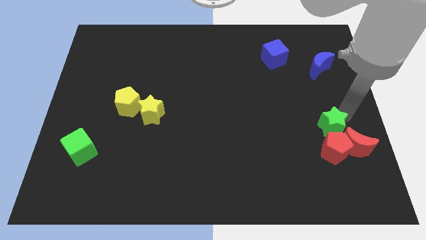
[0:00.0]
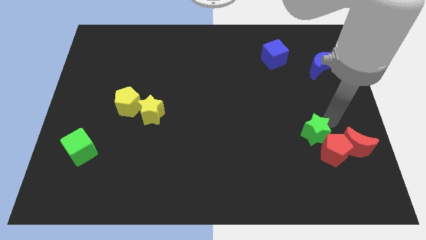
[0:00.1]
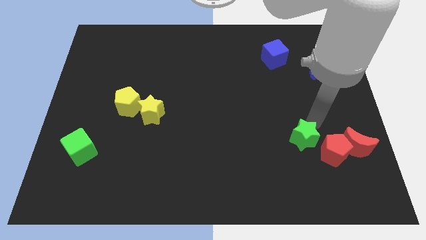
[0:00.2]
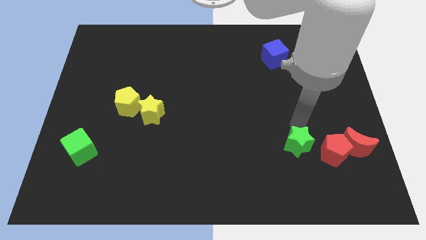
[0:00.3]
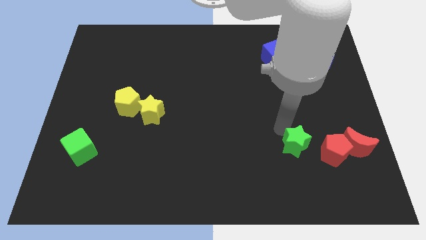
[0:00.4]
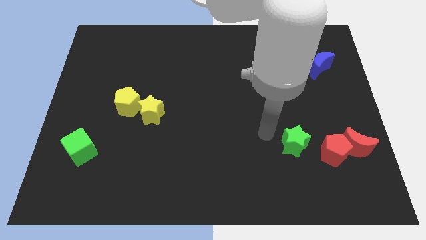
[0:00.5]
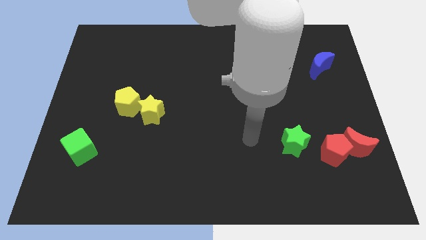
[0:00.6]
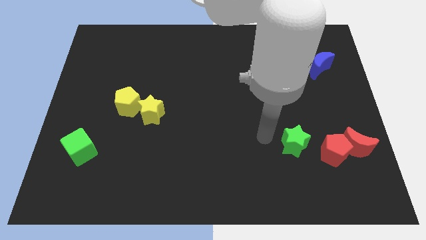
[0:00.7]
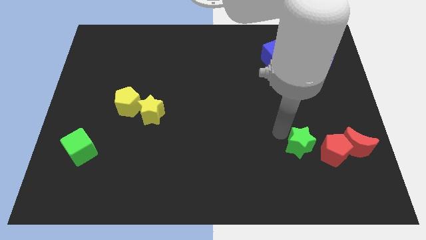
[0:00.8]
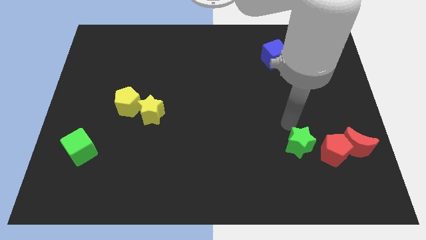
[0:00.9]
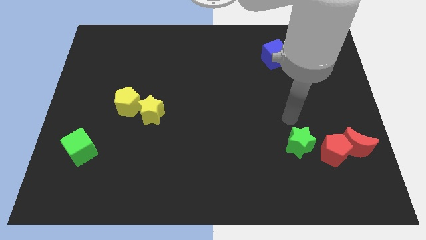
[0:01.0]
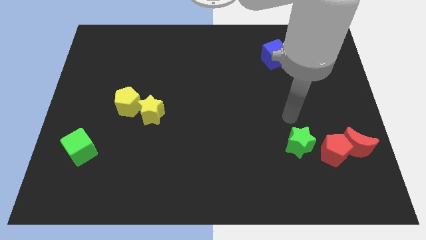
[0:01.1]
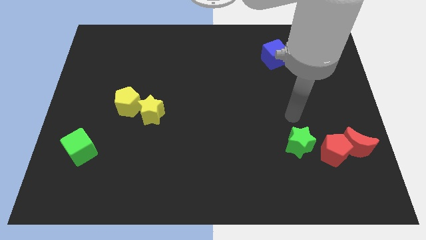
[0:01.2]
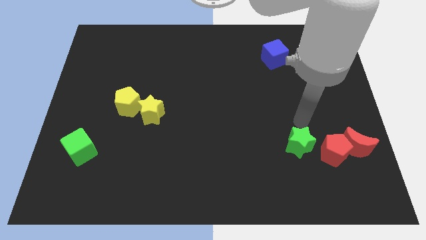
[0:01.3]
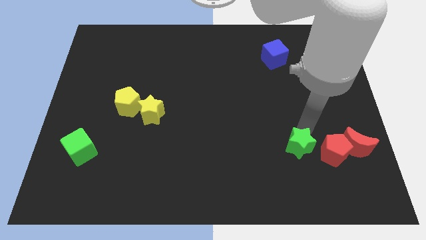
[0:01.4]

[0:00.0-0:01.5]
separate green star from red pentagon

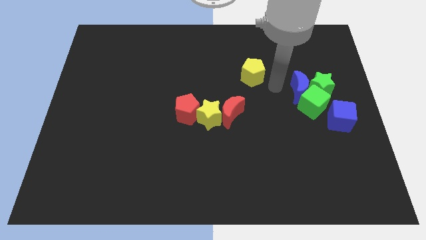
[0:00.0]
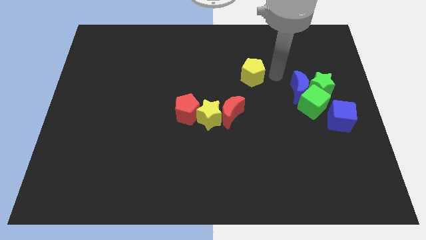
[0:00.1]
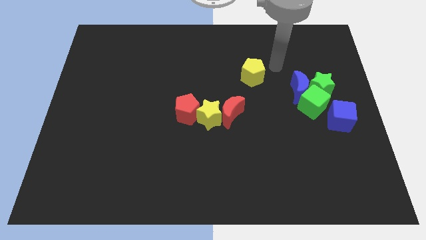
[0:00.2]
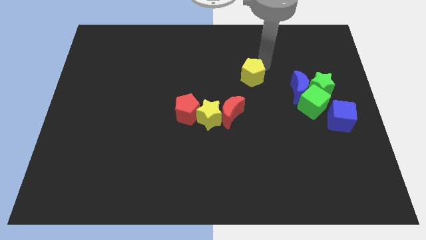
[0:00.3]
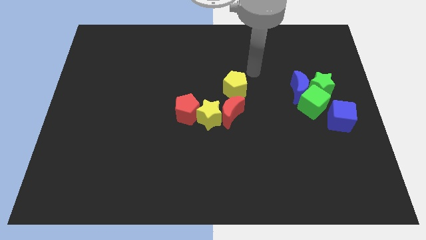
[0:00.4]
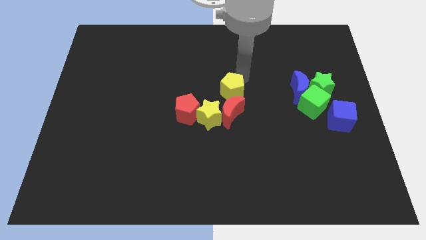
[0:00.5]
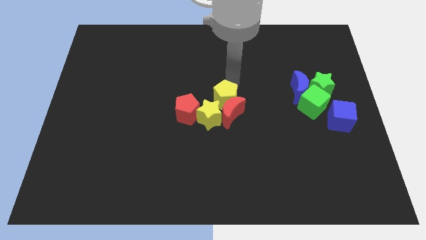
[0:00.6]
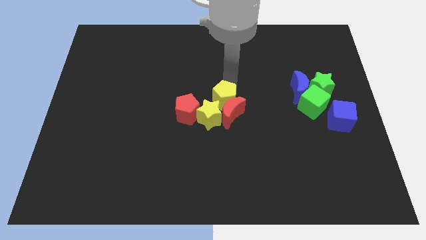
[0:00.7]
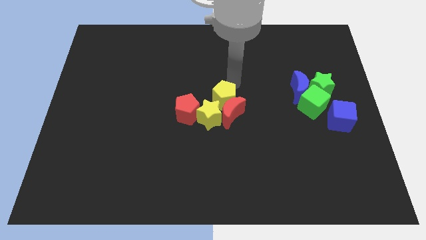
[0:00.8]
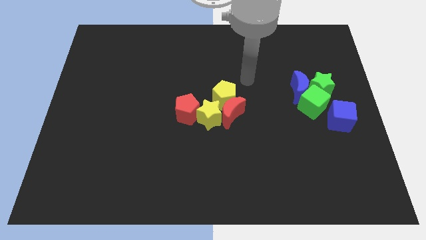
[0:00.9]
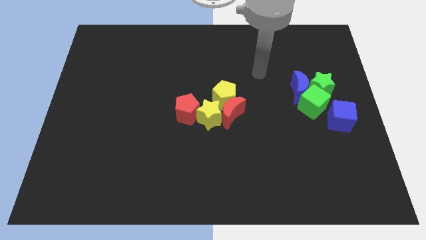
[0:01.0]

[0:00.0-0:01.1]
move the yellow pentagon into the yellow star

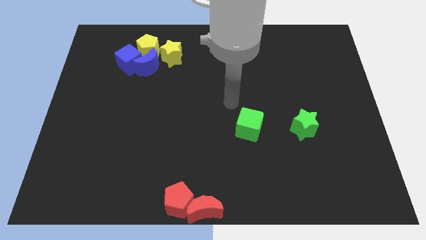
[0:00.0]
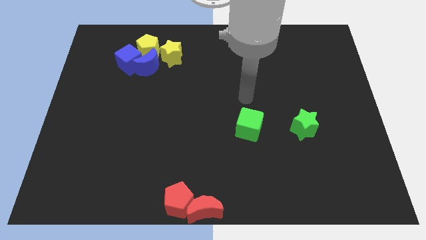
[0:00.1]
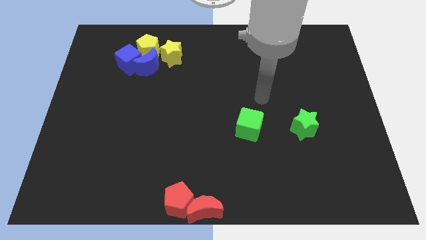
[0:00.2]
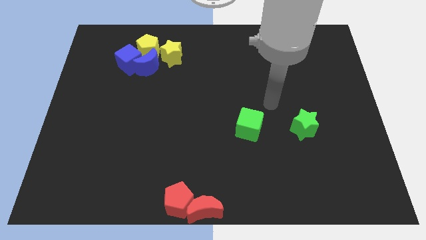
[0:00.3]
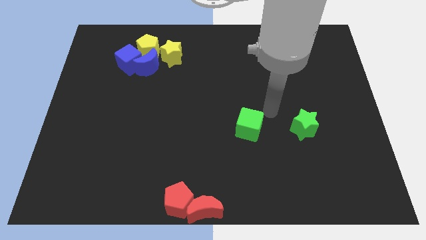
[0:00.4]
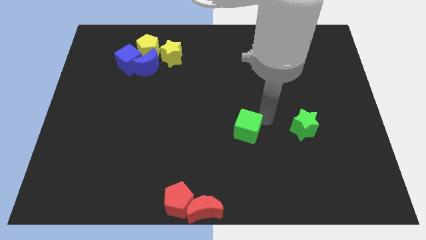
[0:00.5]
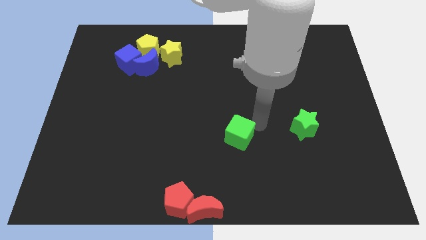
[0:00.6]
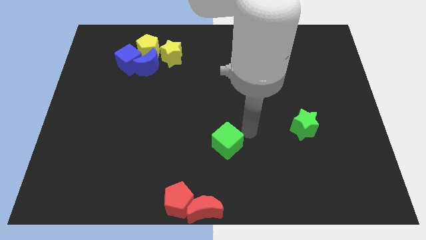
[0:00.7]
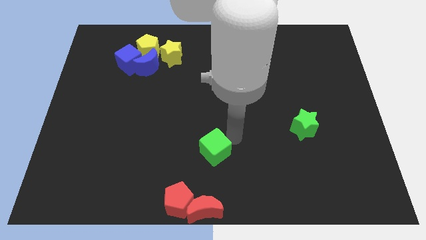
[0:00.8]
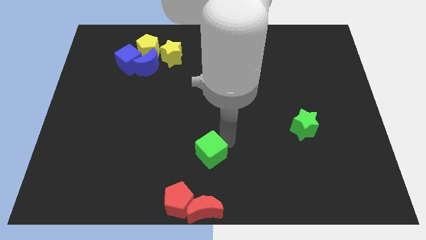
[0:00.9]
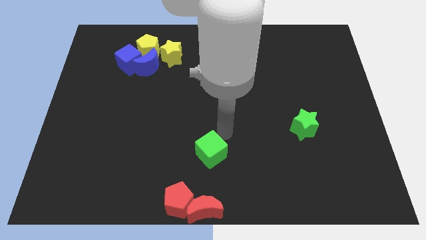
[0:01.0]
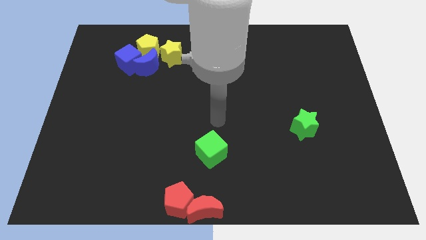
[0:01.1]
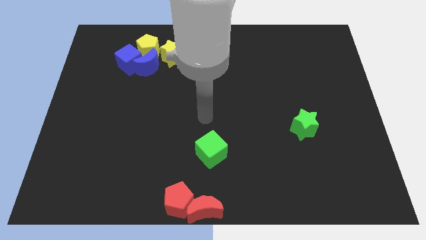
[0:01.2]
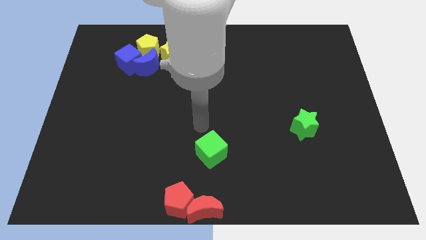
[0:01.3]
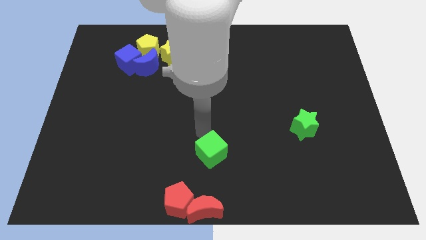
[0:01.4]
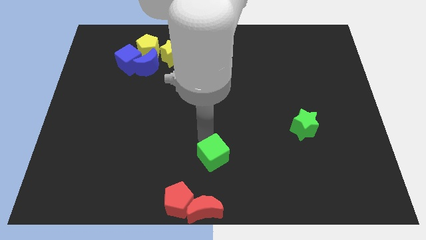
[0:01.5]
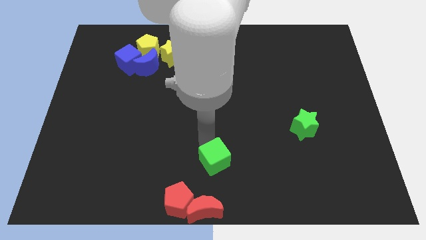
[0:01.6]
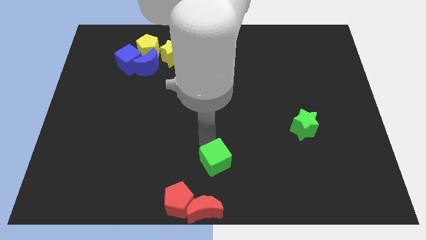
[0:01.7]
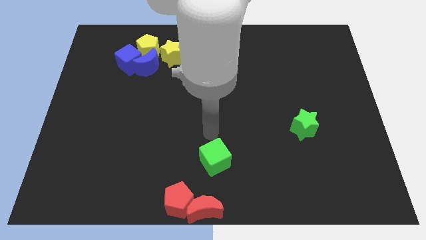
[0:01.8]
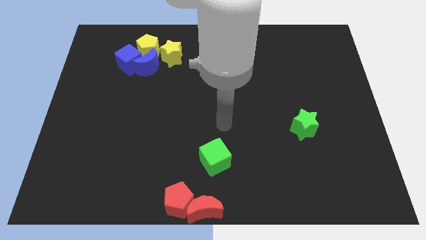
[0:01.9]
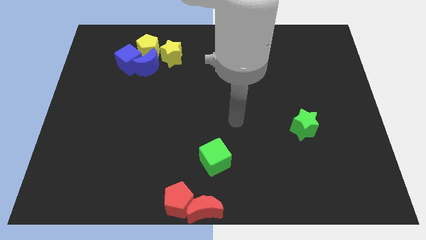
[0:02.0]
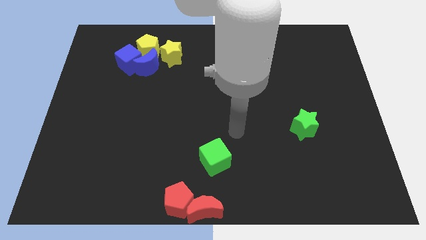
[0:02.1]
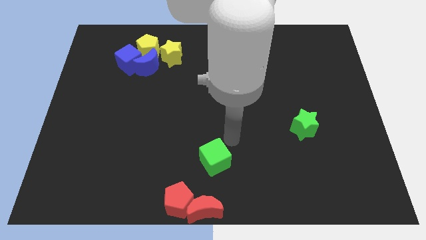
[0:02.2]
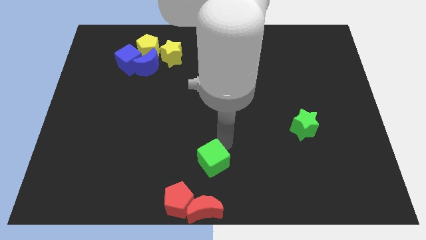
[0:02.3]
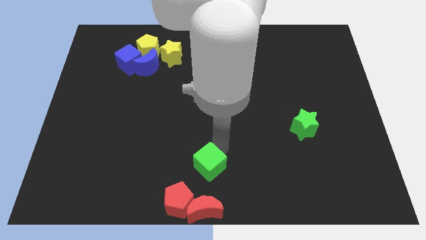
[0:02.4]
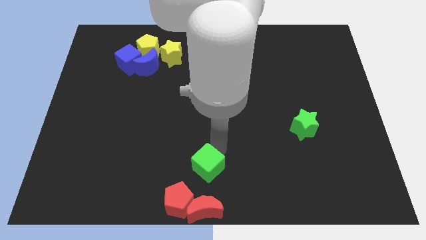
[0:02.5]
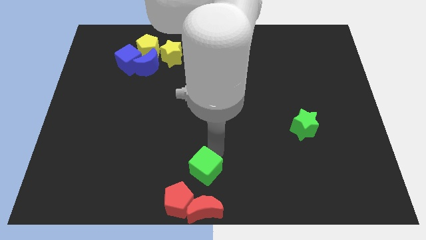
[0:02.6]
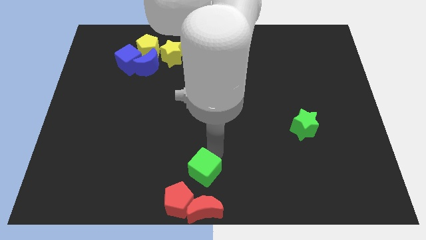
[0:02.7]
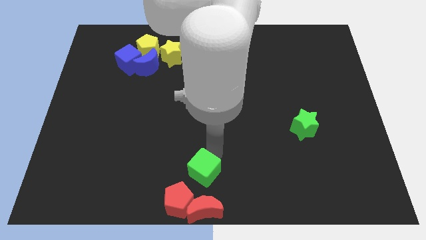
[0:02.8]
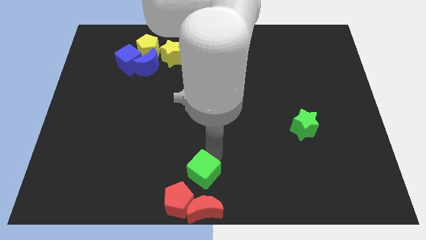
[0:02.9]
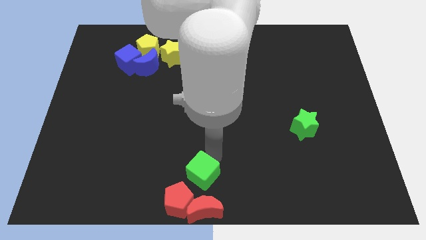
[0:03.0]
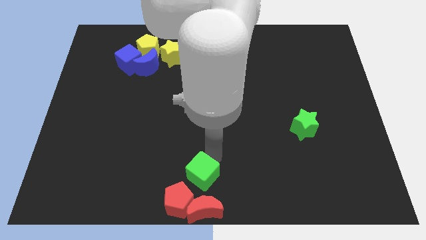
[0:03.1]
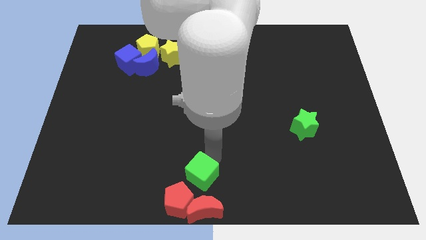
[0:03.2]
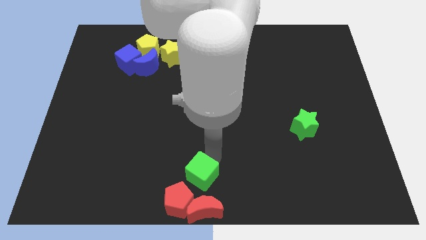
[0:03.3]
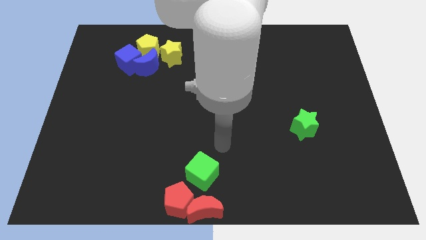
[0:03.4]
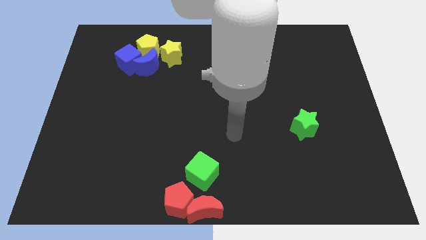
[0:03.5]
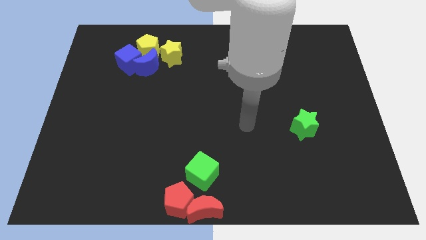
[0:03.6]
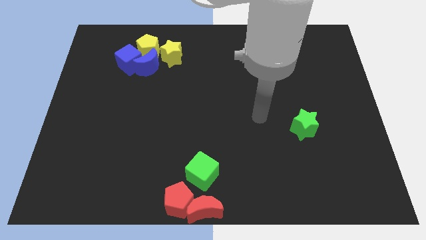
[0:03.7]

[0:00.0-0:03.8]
push the green cube to the top of red crescent

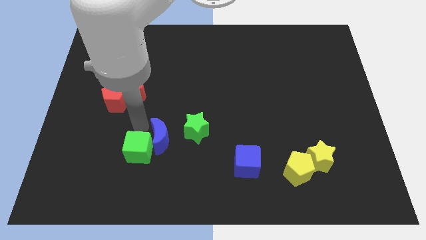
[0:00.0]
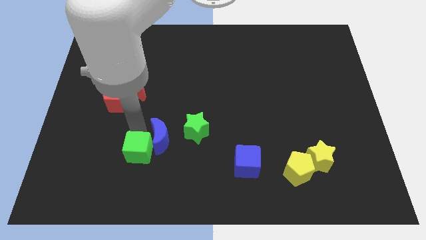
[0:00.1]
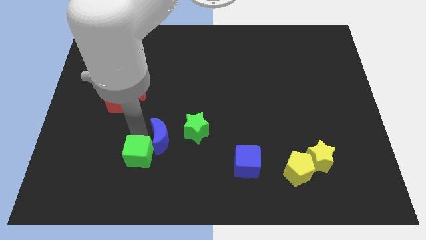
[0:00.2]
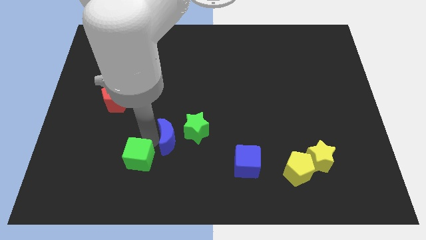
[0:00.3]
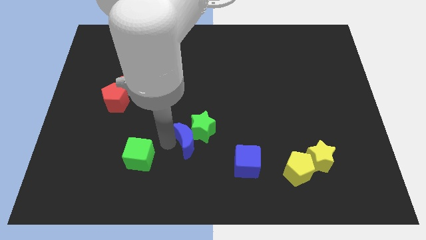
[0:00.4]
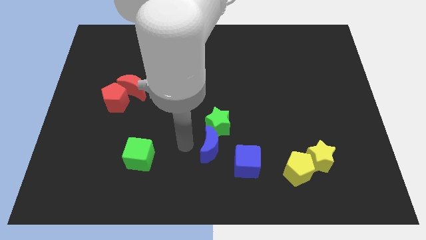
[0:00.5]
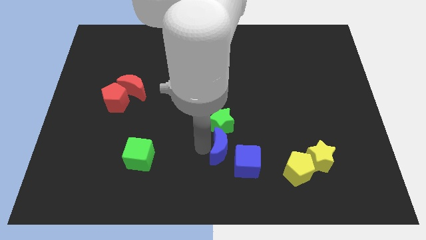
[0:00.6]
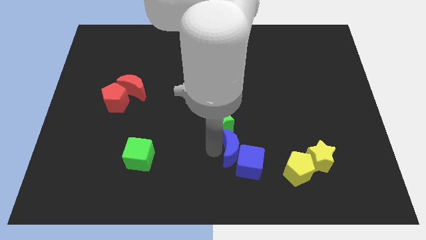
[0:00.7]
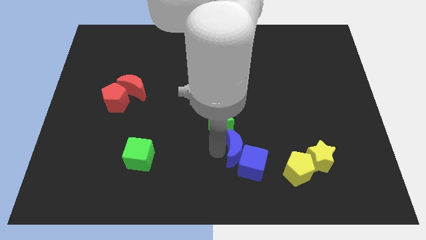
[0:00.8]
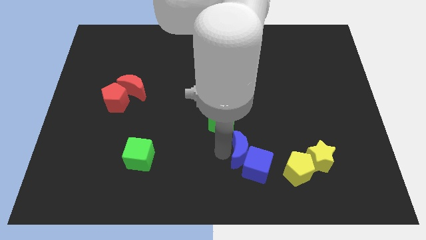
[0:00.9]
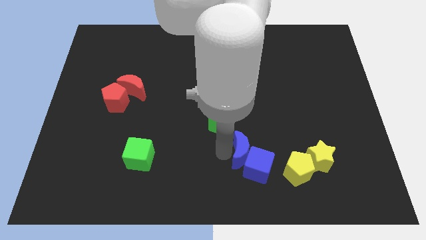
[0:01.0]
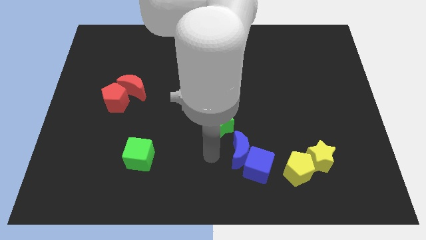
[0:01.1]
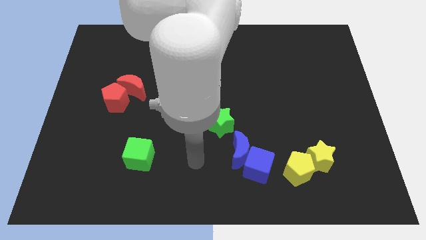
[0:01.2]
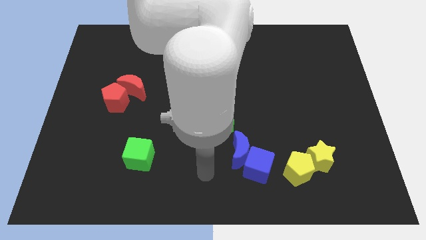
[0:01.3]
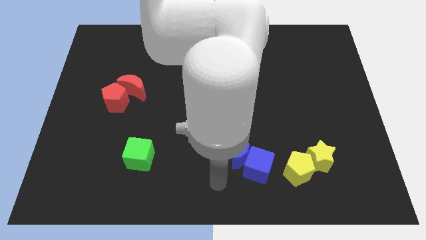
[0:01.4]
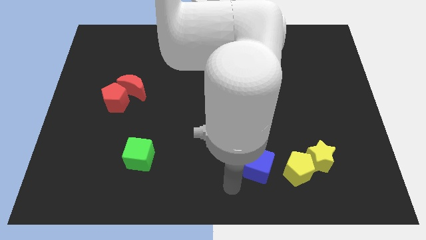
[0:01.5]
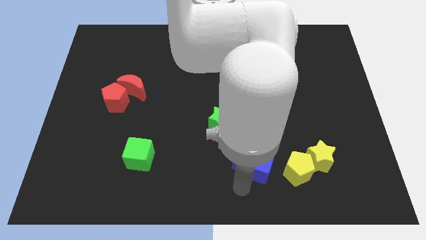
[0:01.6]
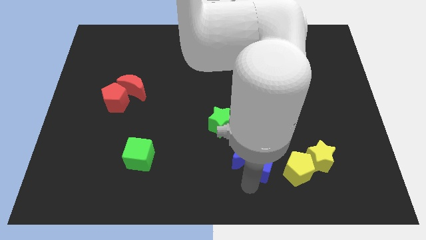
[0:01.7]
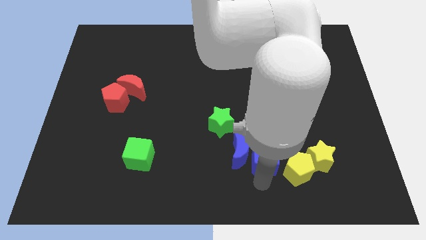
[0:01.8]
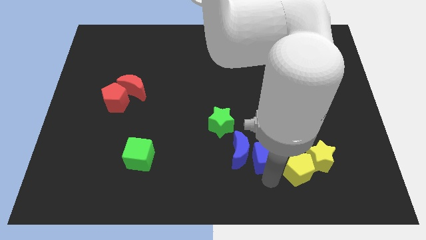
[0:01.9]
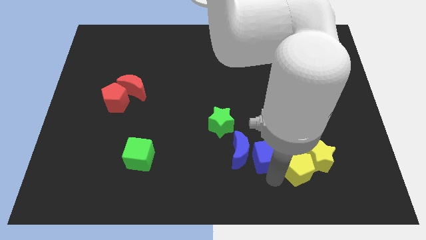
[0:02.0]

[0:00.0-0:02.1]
separate the blue moon from the green cube

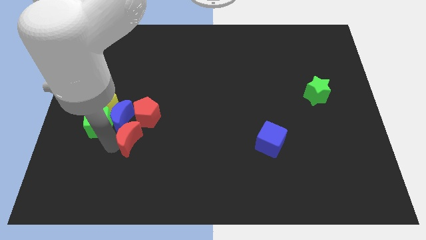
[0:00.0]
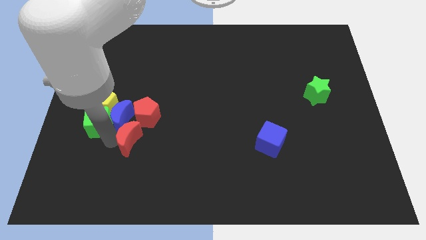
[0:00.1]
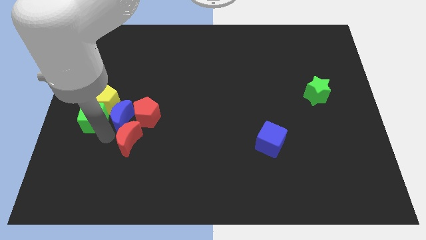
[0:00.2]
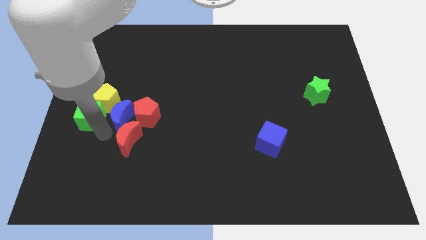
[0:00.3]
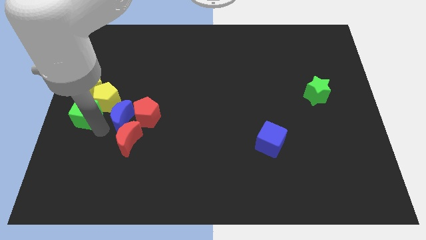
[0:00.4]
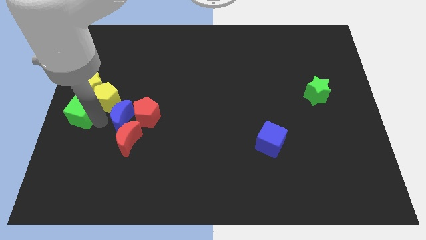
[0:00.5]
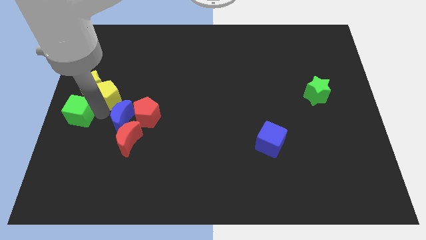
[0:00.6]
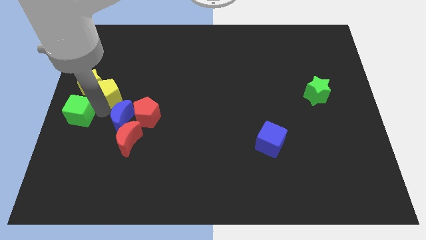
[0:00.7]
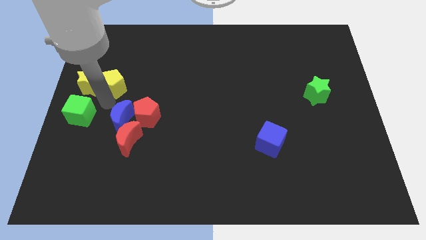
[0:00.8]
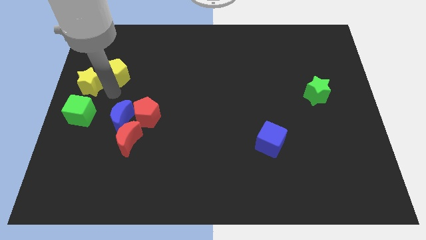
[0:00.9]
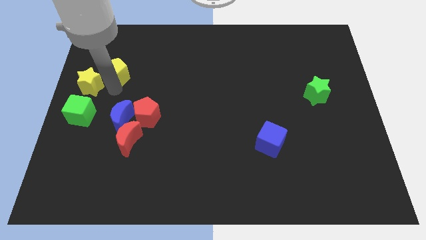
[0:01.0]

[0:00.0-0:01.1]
push yellow pentagon slightly upward
